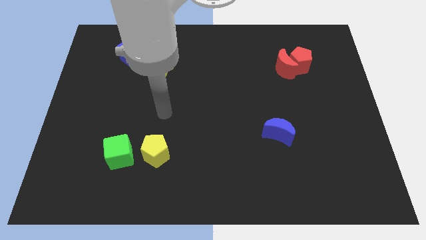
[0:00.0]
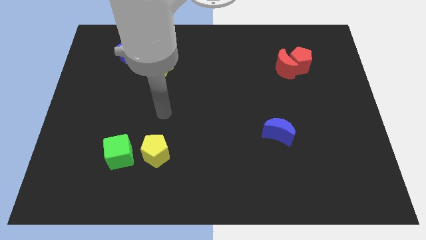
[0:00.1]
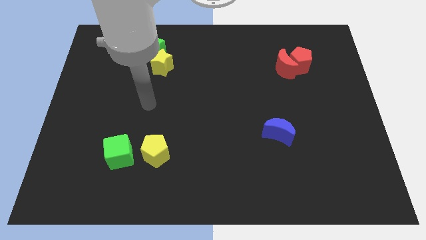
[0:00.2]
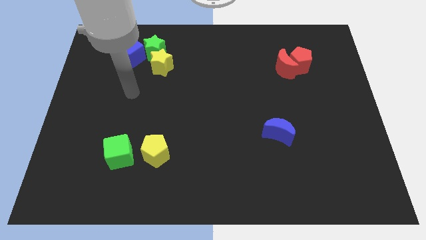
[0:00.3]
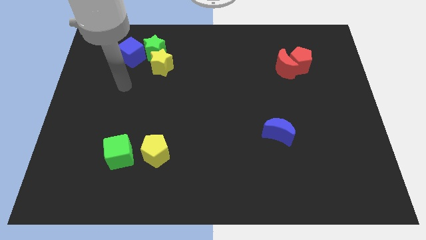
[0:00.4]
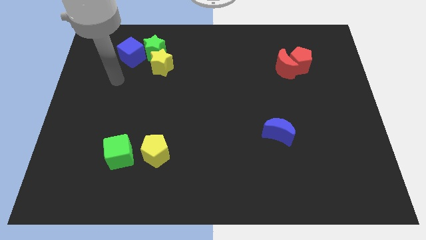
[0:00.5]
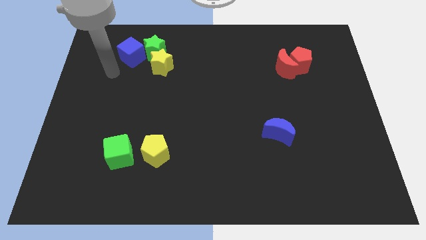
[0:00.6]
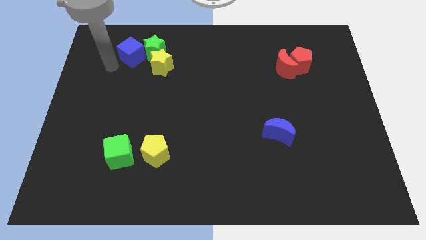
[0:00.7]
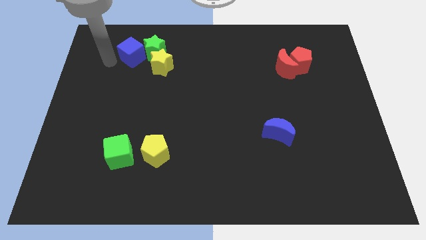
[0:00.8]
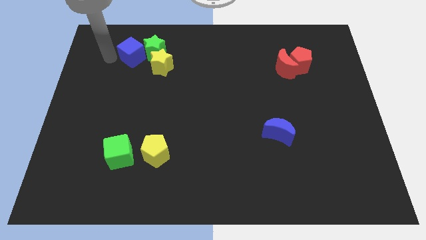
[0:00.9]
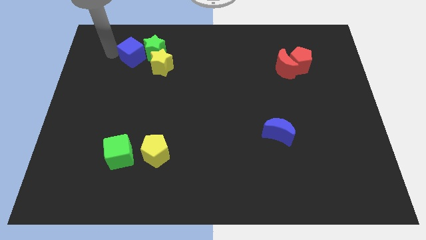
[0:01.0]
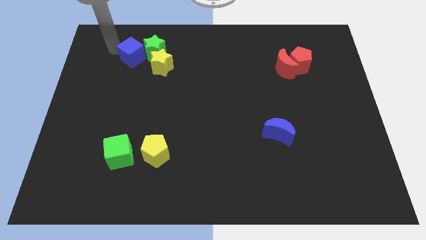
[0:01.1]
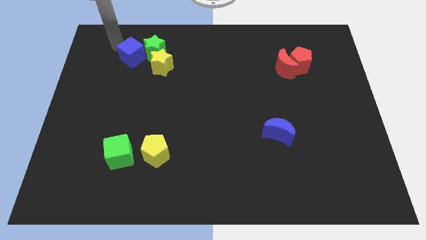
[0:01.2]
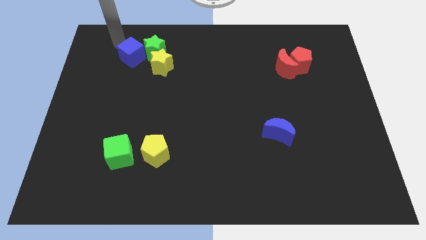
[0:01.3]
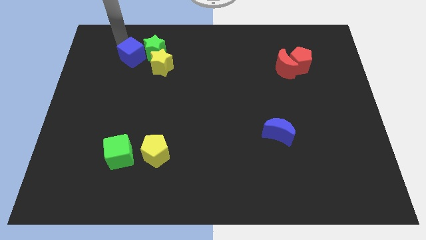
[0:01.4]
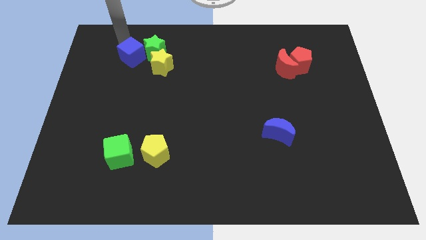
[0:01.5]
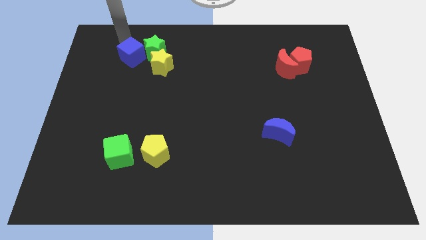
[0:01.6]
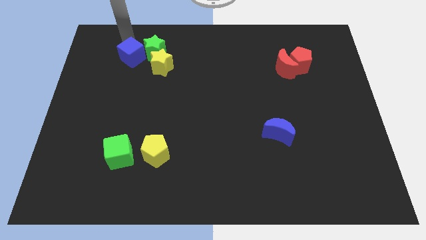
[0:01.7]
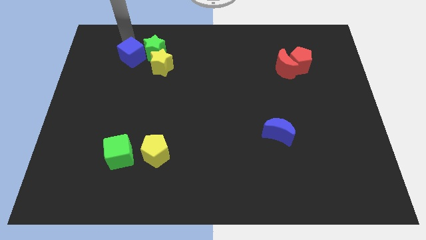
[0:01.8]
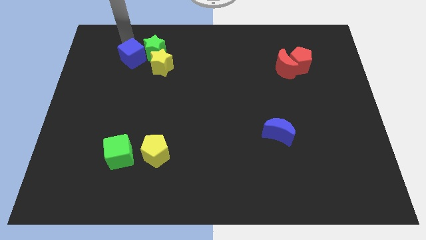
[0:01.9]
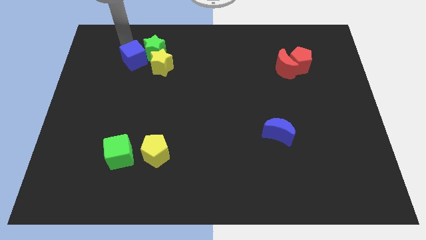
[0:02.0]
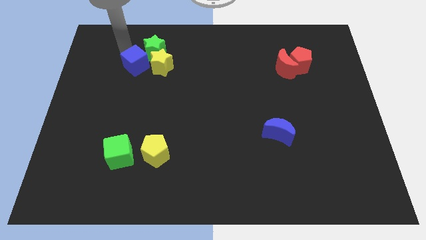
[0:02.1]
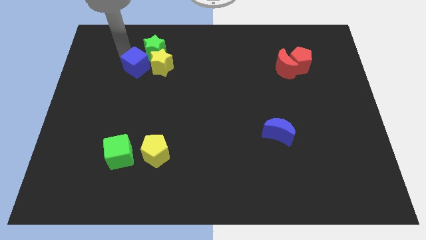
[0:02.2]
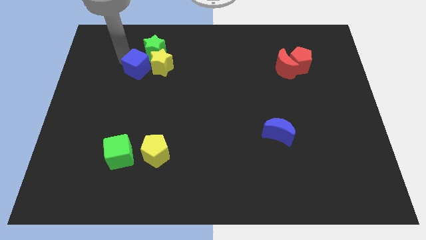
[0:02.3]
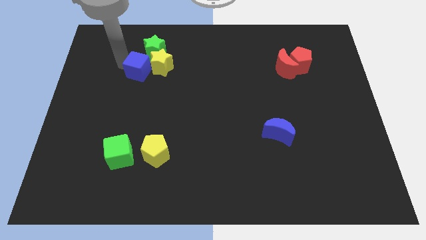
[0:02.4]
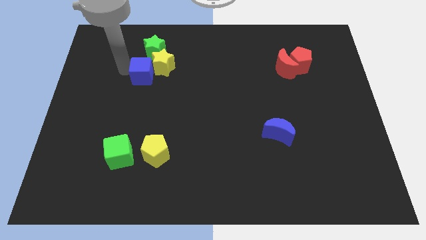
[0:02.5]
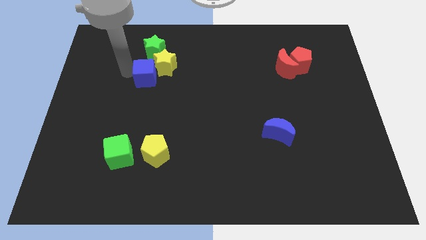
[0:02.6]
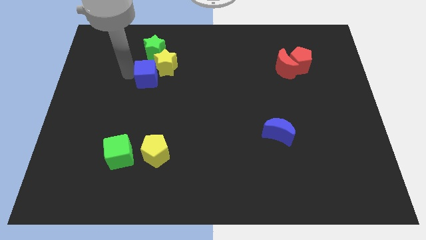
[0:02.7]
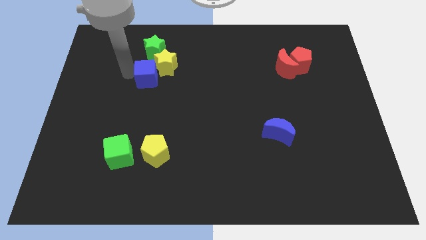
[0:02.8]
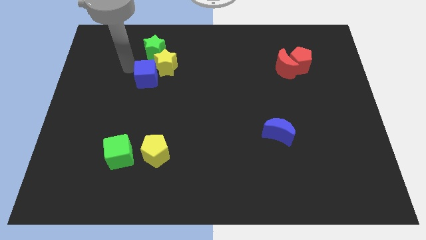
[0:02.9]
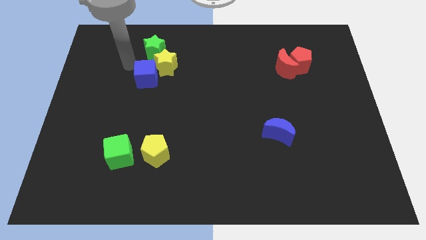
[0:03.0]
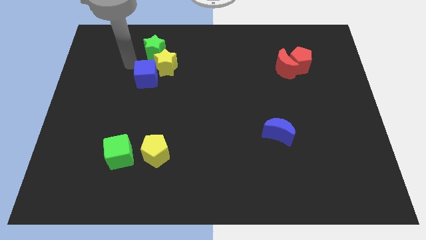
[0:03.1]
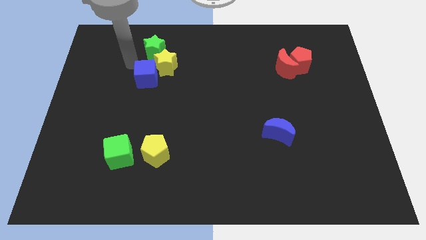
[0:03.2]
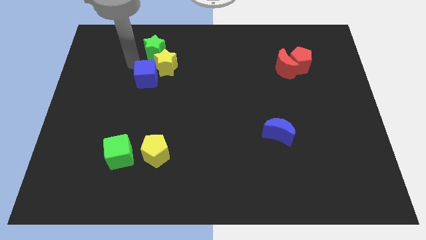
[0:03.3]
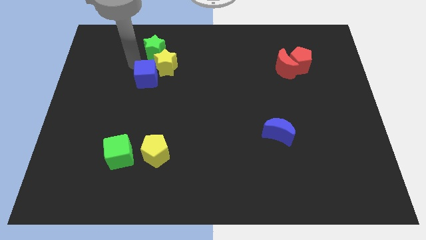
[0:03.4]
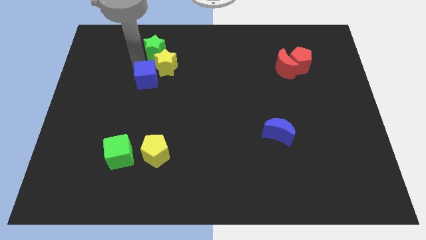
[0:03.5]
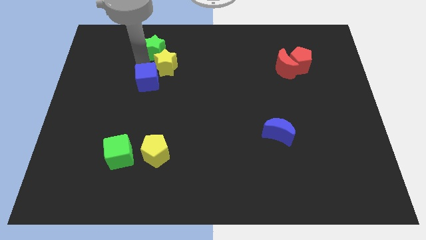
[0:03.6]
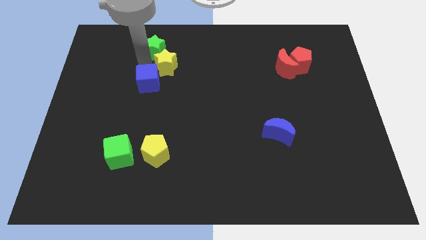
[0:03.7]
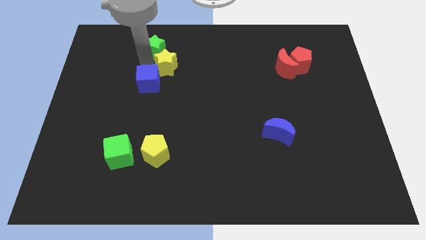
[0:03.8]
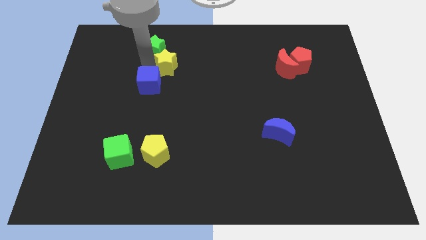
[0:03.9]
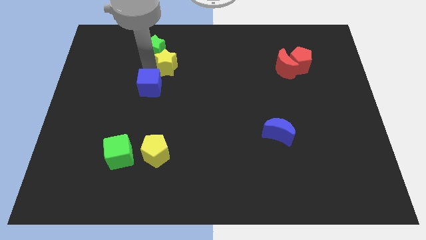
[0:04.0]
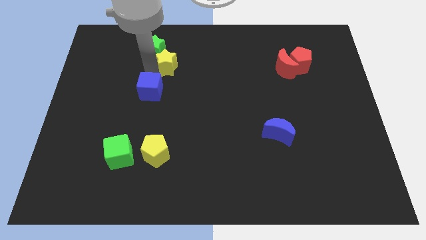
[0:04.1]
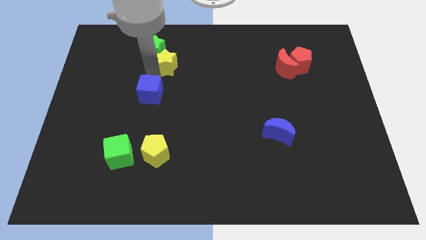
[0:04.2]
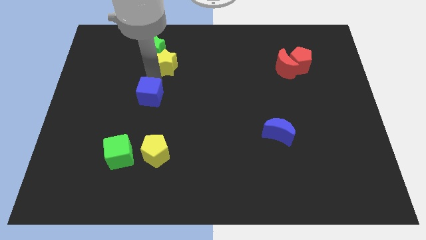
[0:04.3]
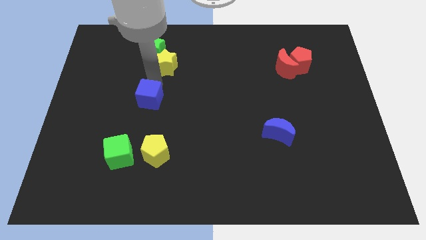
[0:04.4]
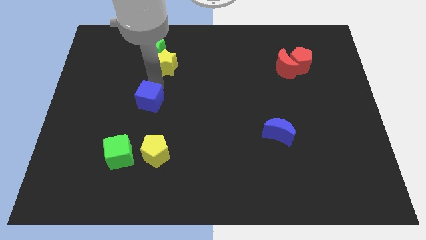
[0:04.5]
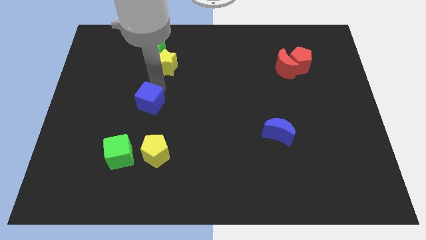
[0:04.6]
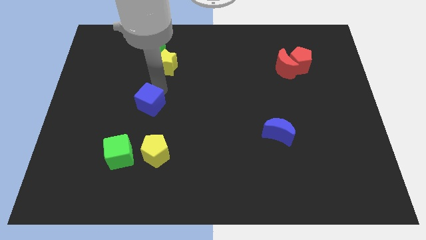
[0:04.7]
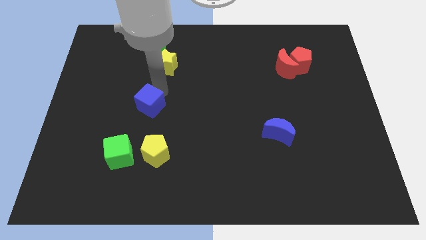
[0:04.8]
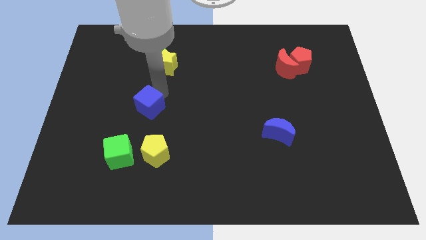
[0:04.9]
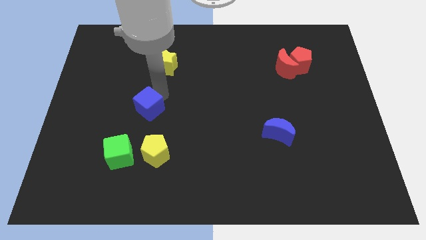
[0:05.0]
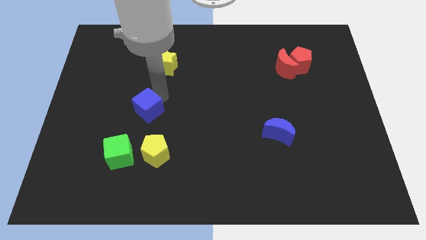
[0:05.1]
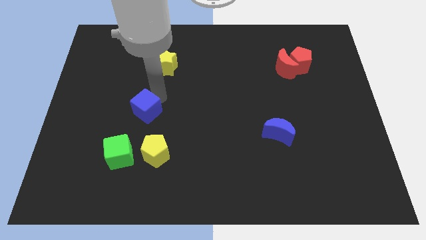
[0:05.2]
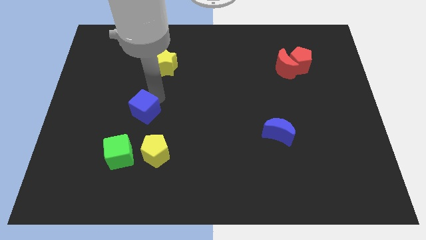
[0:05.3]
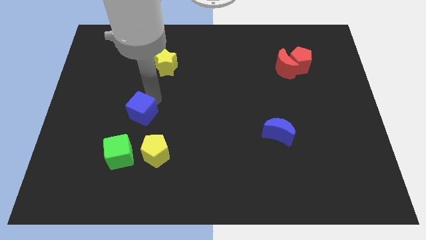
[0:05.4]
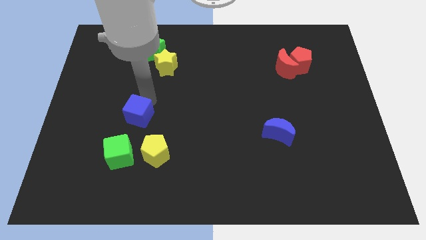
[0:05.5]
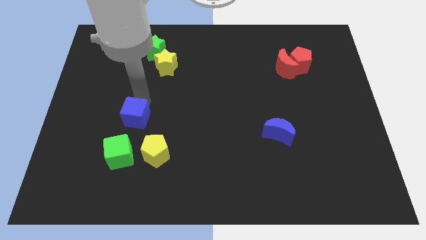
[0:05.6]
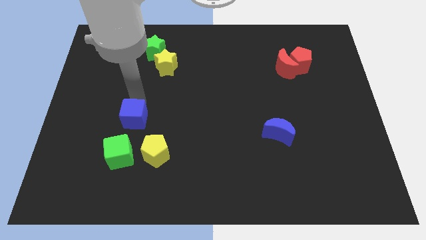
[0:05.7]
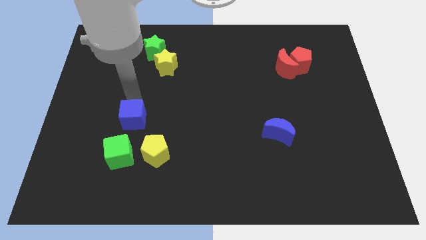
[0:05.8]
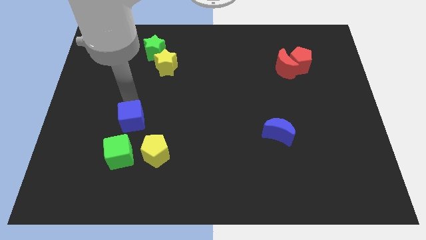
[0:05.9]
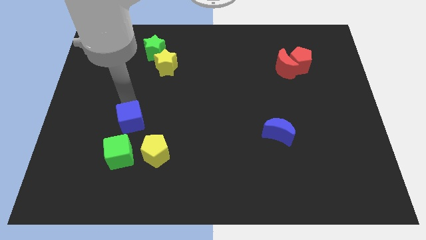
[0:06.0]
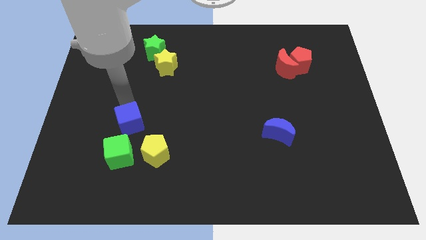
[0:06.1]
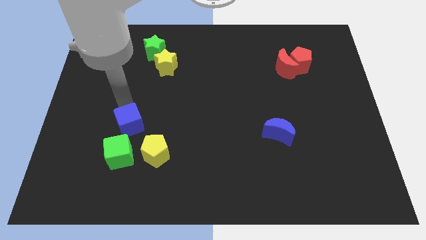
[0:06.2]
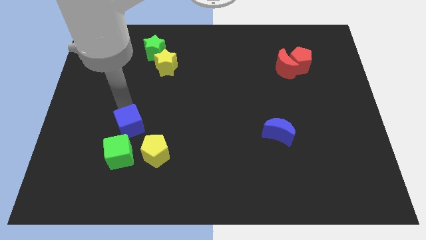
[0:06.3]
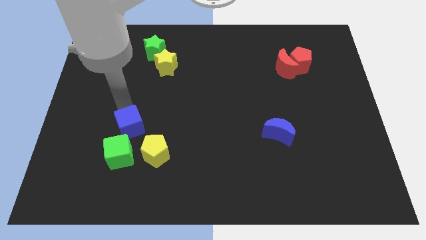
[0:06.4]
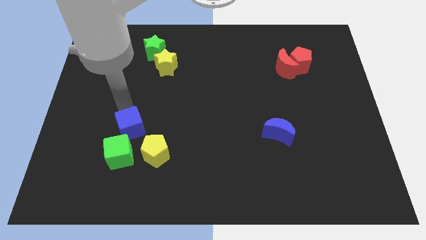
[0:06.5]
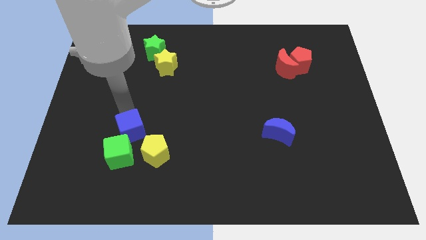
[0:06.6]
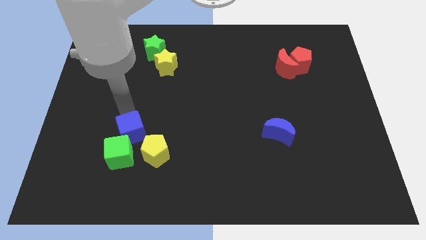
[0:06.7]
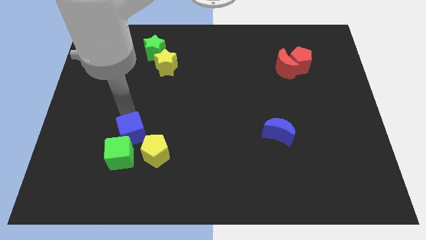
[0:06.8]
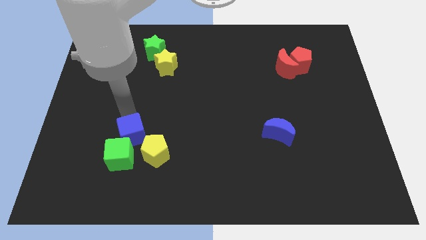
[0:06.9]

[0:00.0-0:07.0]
move the blue cube towards the green cube

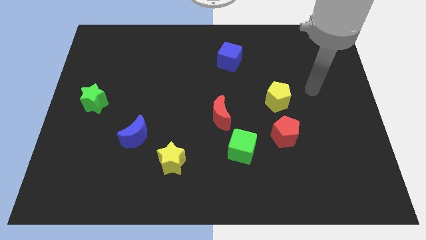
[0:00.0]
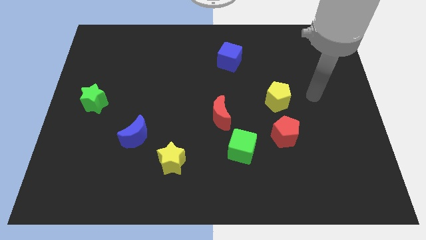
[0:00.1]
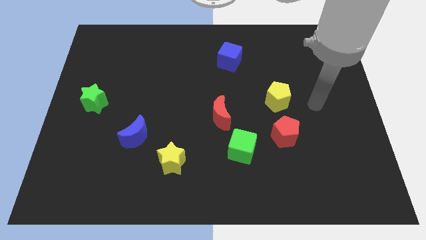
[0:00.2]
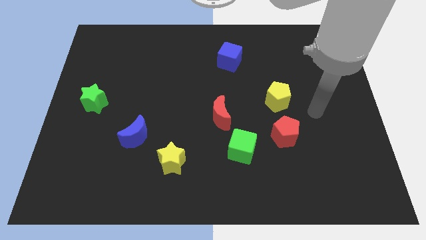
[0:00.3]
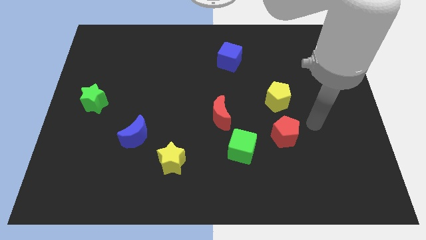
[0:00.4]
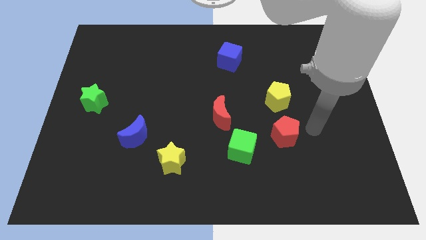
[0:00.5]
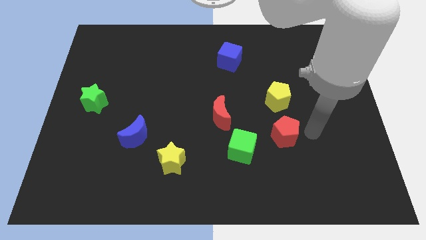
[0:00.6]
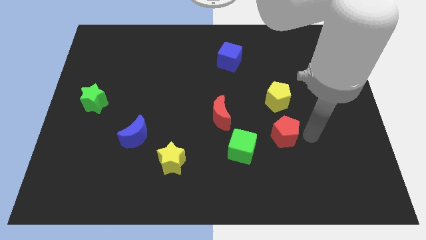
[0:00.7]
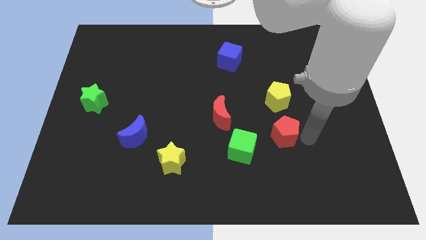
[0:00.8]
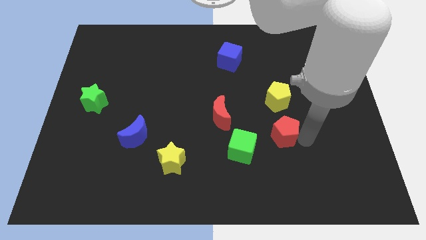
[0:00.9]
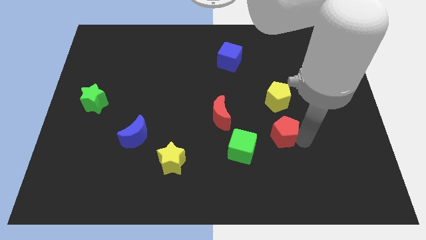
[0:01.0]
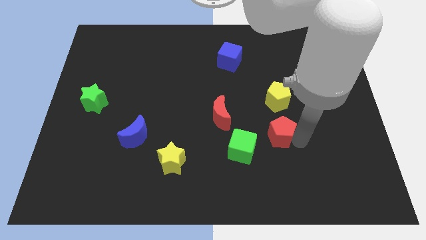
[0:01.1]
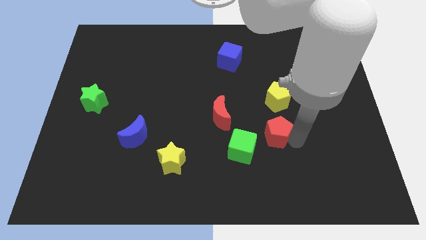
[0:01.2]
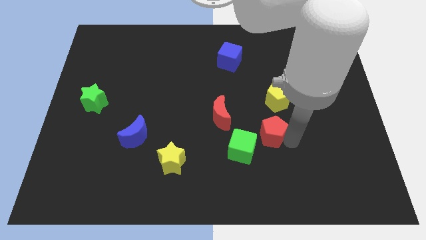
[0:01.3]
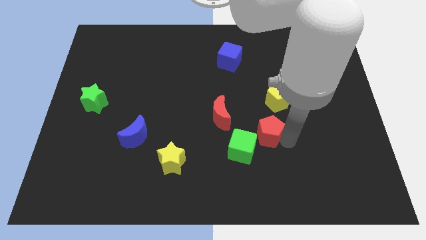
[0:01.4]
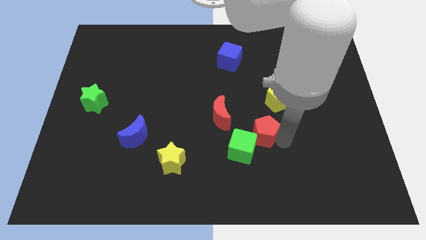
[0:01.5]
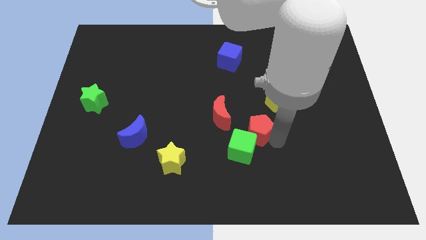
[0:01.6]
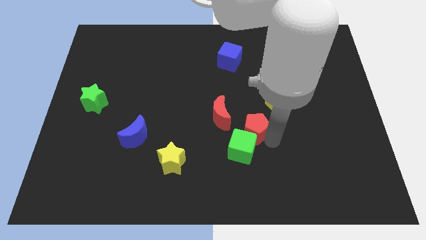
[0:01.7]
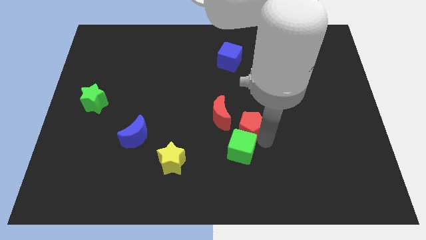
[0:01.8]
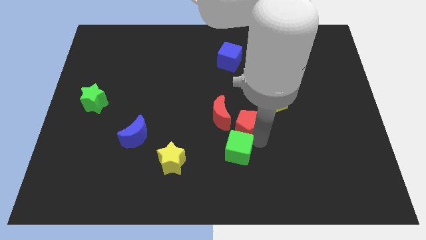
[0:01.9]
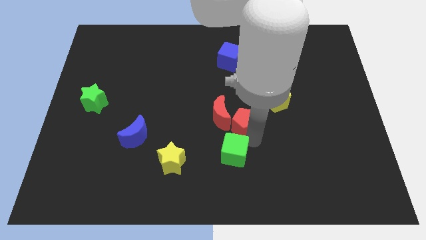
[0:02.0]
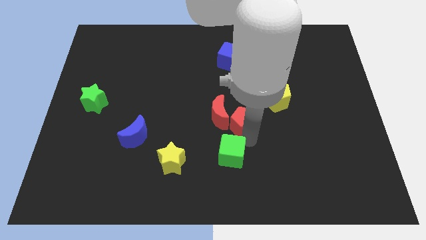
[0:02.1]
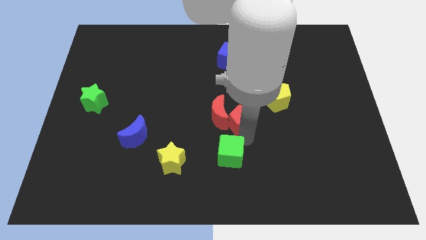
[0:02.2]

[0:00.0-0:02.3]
push the red pentagon next to the red moon
